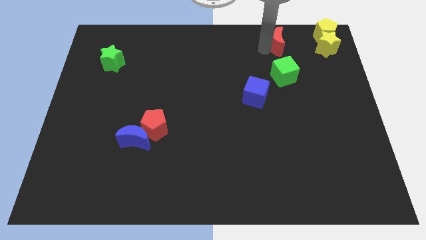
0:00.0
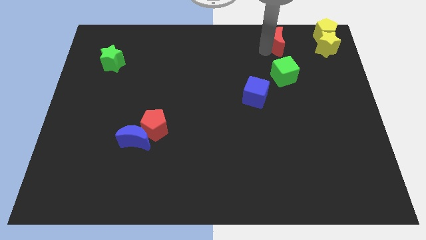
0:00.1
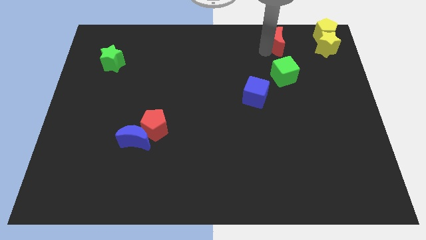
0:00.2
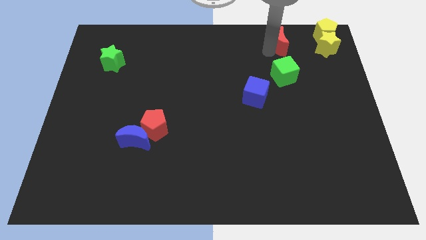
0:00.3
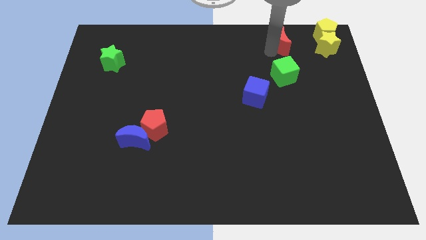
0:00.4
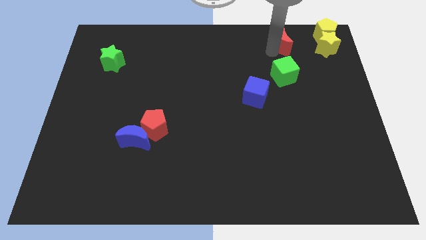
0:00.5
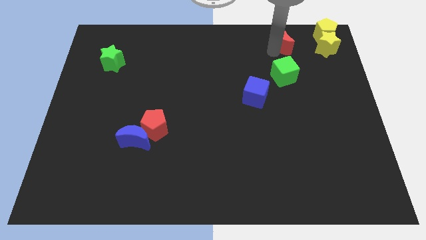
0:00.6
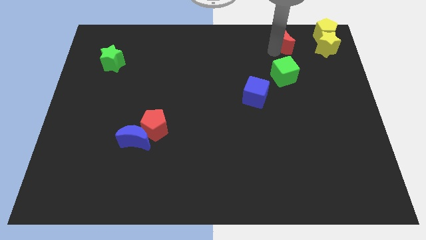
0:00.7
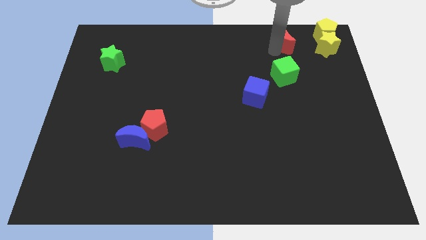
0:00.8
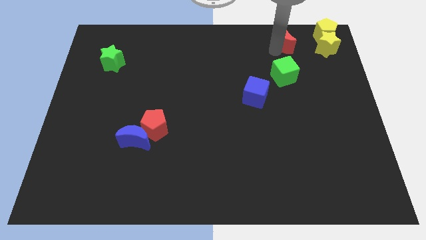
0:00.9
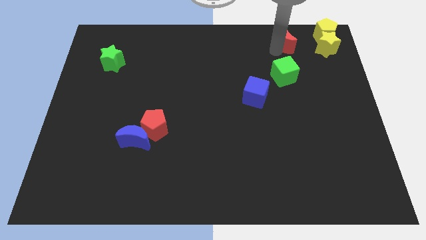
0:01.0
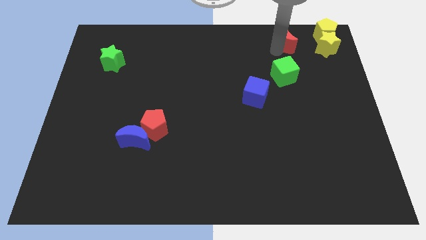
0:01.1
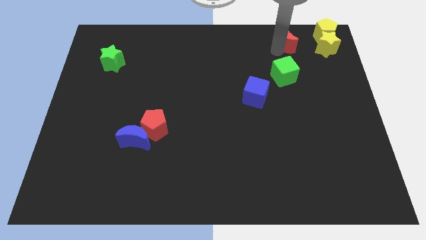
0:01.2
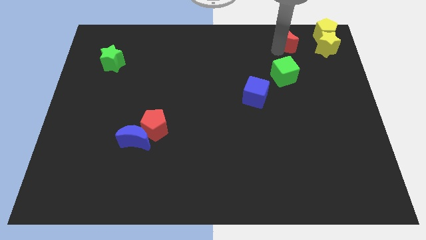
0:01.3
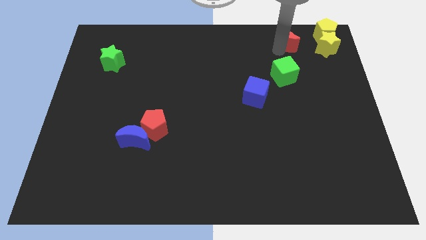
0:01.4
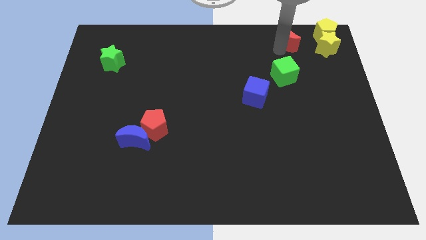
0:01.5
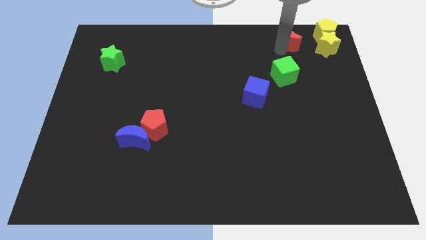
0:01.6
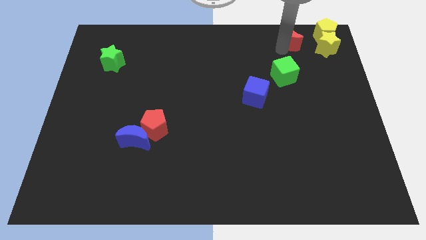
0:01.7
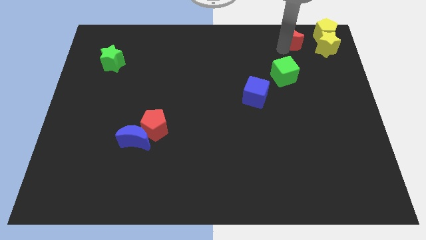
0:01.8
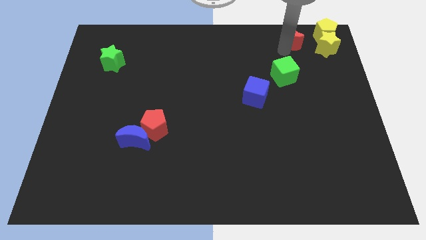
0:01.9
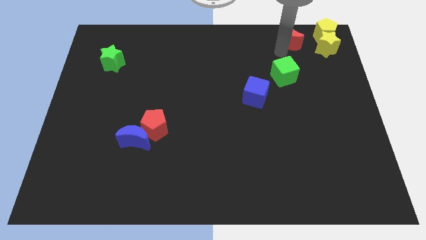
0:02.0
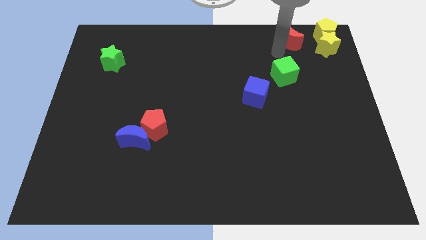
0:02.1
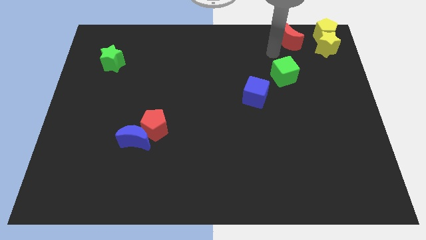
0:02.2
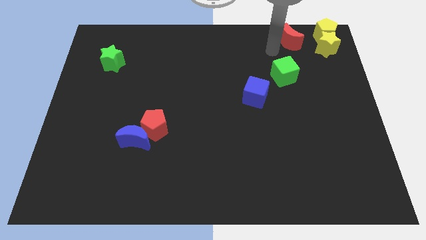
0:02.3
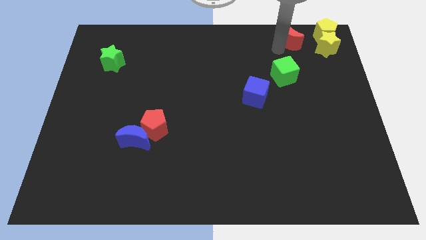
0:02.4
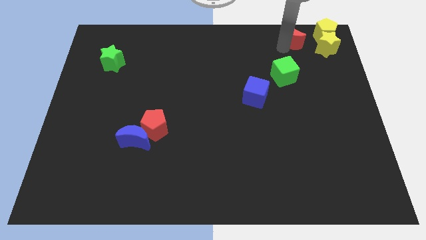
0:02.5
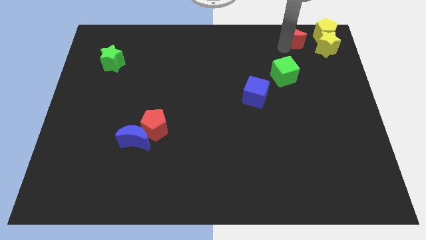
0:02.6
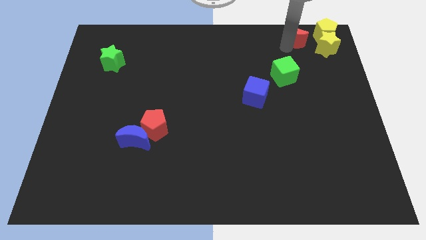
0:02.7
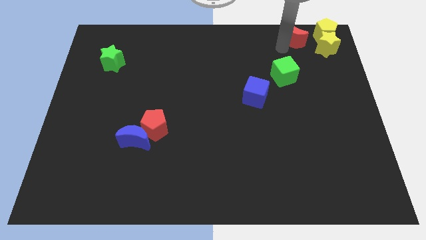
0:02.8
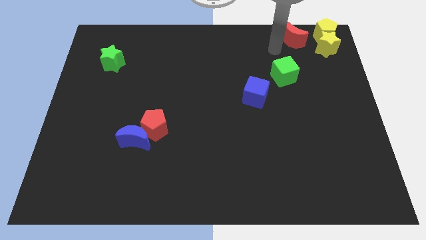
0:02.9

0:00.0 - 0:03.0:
place the red moon diagonally top right to the green cube

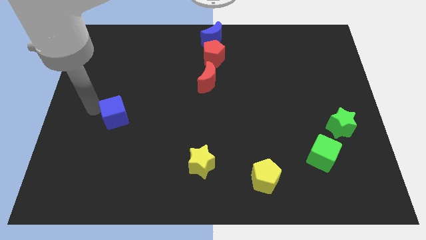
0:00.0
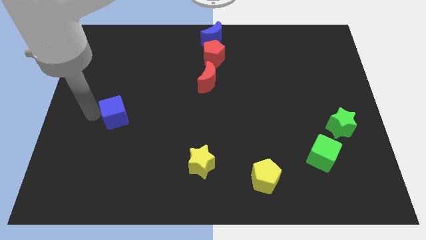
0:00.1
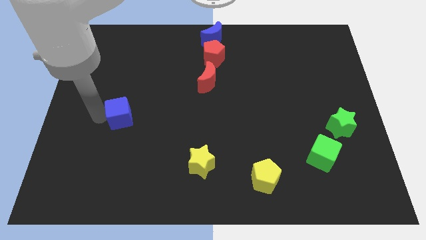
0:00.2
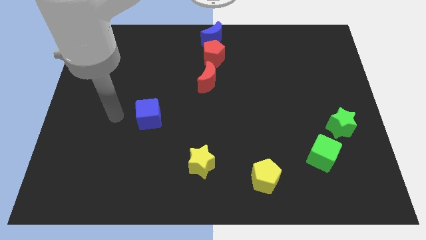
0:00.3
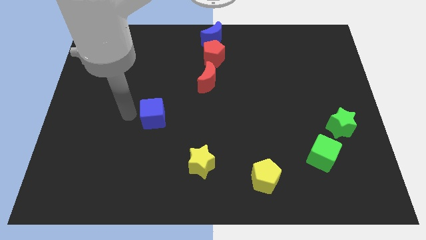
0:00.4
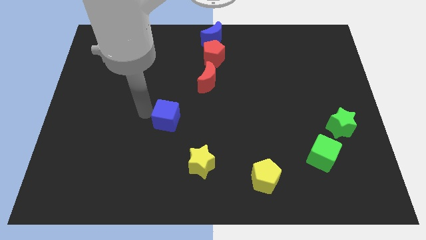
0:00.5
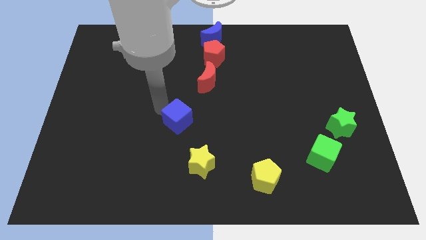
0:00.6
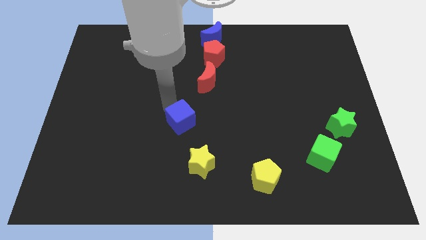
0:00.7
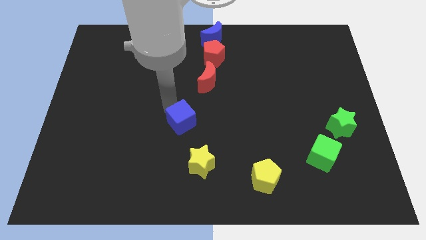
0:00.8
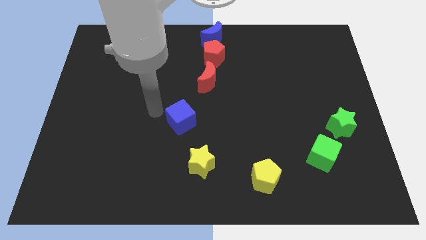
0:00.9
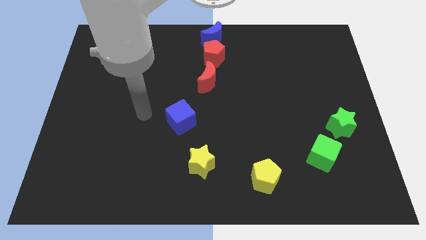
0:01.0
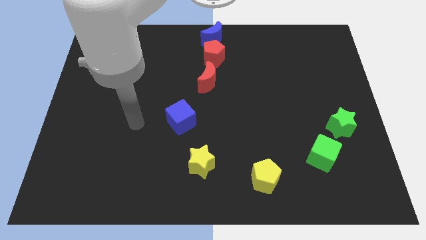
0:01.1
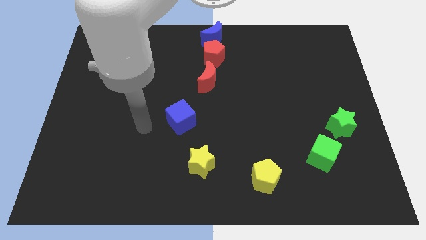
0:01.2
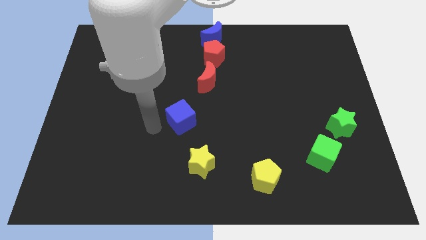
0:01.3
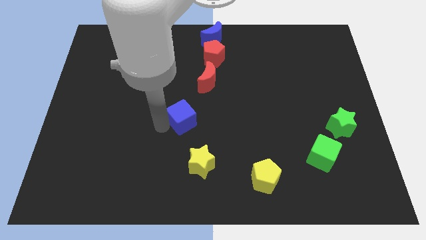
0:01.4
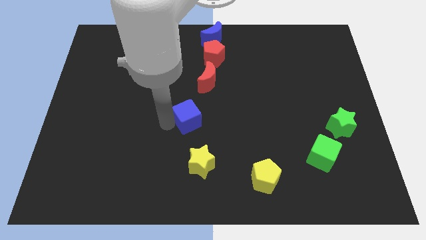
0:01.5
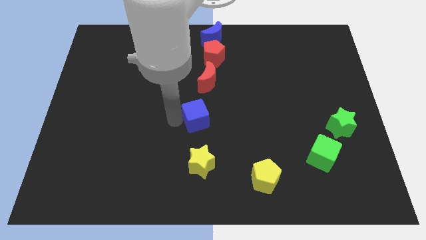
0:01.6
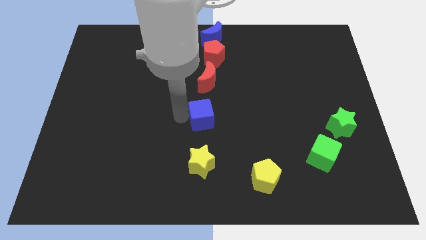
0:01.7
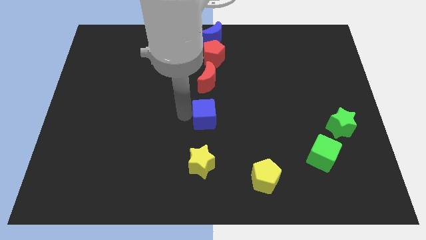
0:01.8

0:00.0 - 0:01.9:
place the blue cube below the red moon to form a line

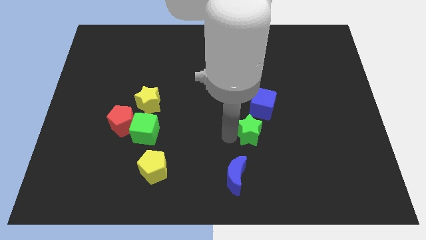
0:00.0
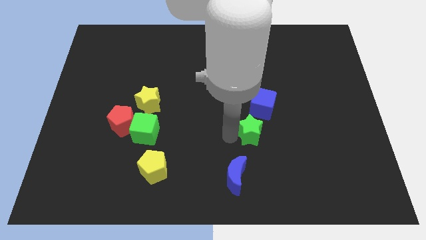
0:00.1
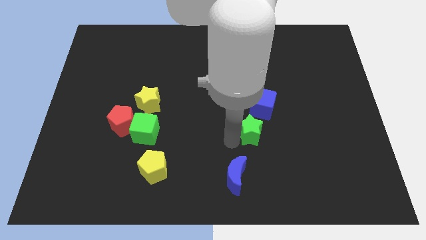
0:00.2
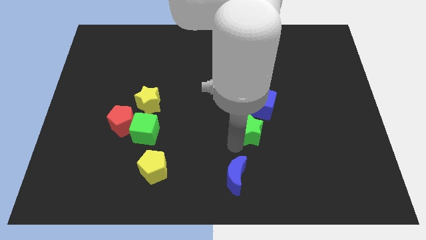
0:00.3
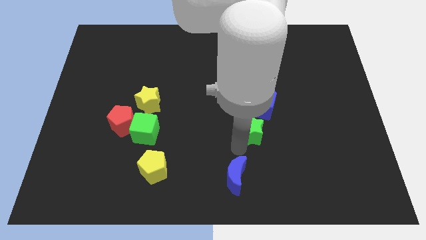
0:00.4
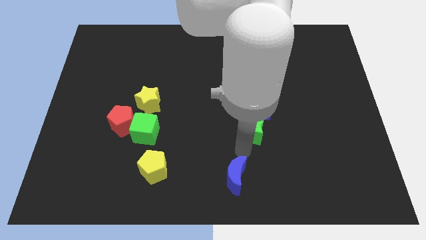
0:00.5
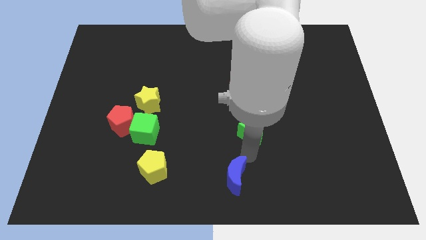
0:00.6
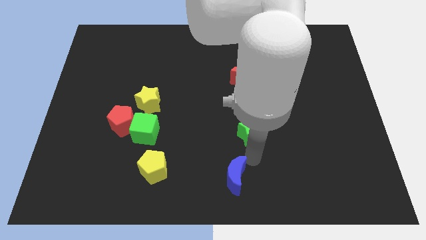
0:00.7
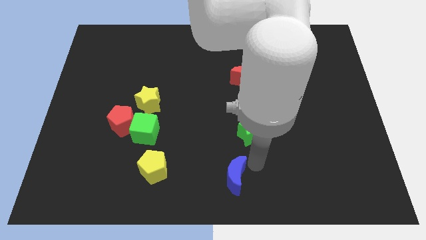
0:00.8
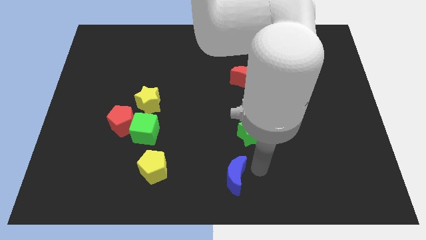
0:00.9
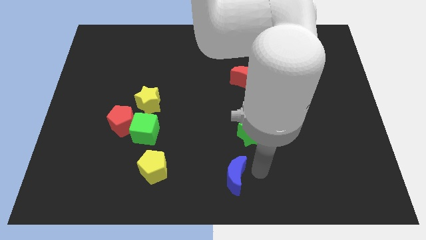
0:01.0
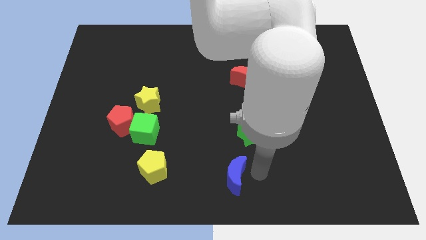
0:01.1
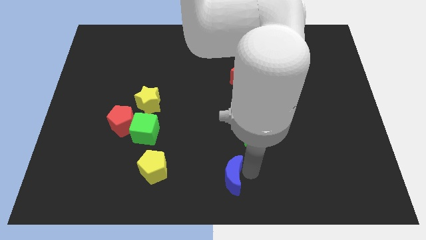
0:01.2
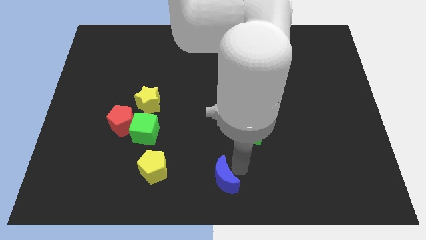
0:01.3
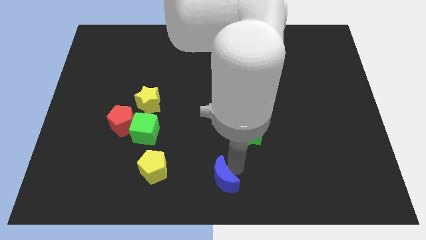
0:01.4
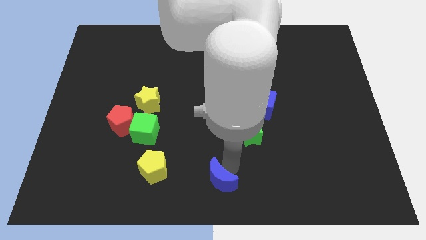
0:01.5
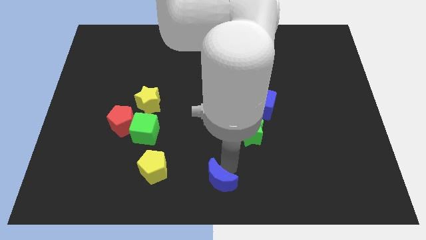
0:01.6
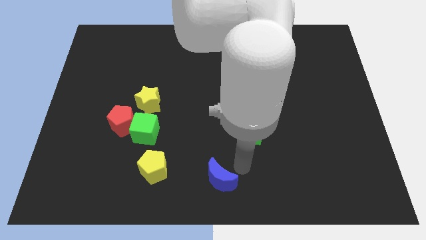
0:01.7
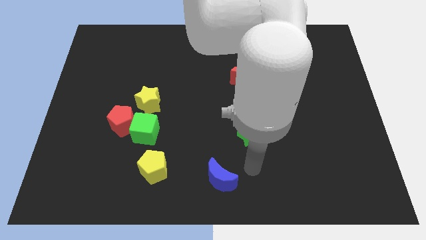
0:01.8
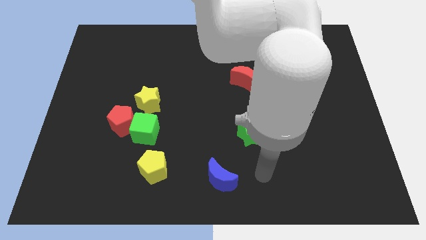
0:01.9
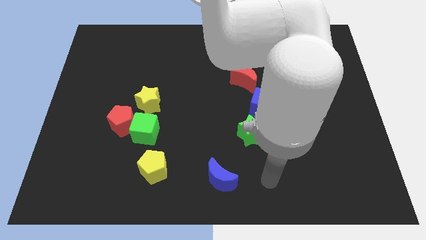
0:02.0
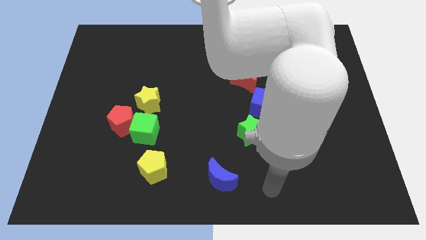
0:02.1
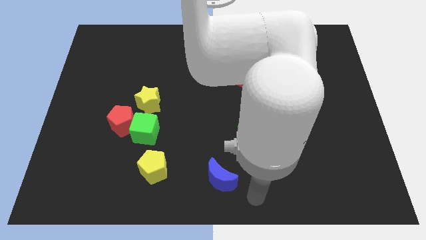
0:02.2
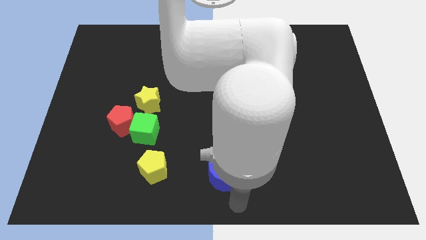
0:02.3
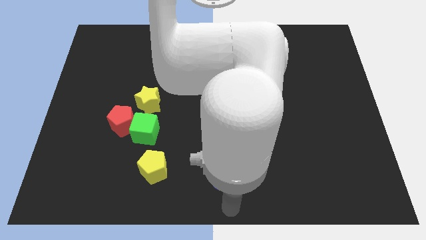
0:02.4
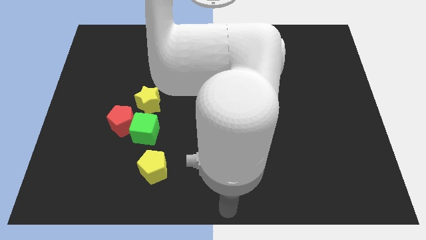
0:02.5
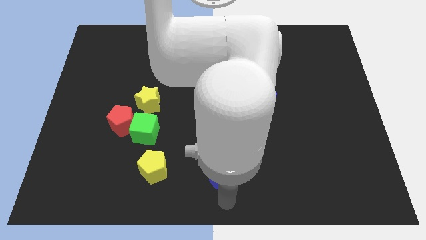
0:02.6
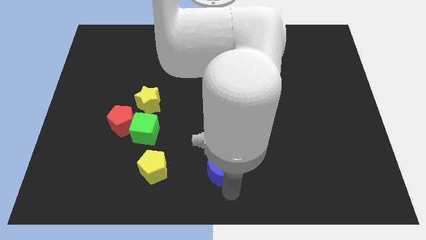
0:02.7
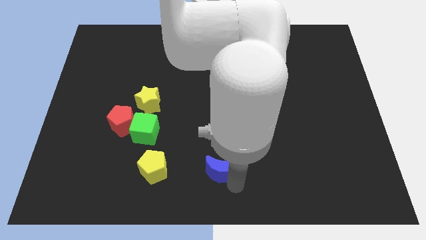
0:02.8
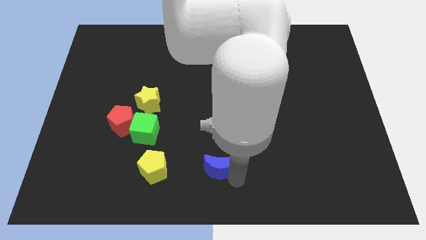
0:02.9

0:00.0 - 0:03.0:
move the blue moon parallel to the yellow pentagon

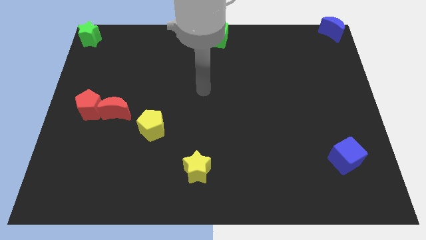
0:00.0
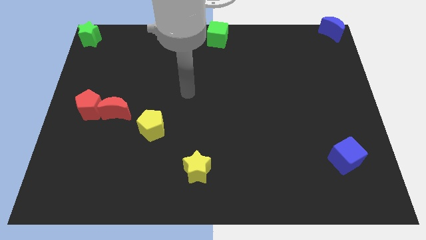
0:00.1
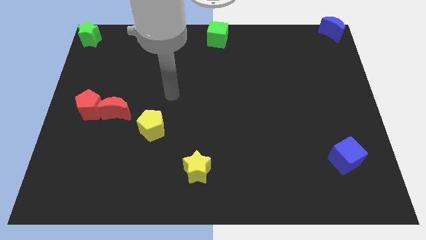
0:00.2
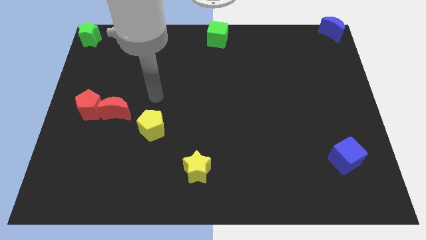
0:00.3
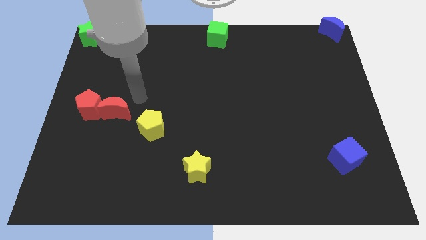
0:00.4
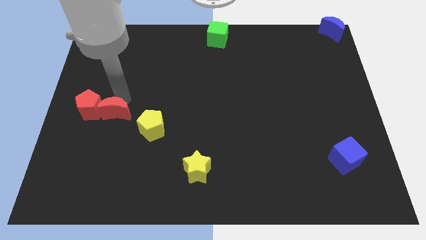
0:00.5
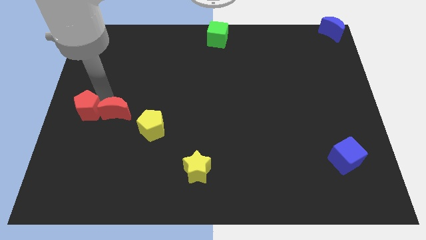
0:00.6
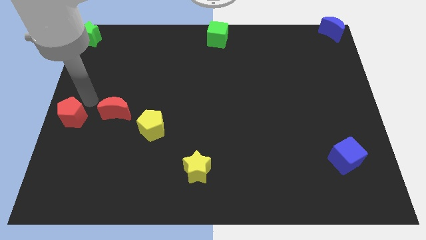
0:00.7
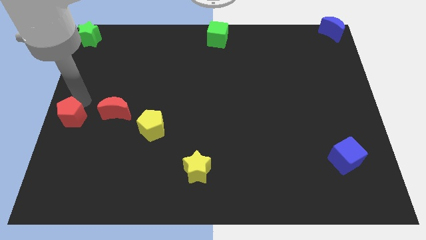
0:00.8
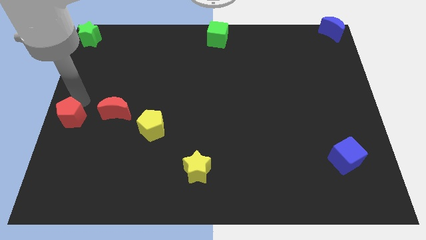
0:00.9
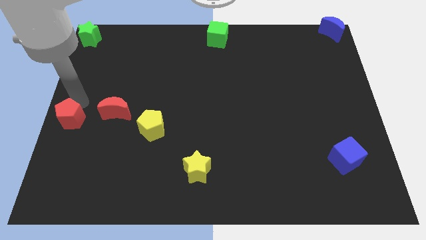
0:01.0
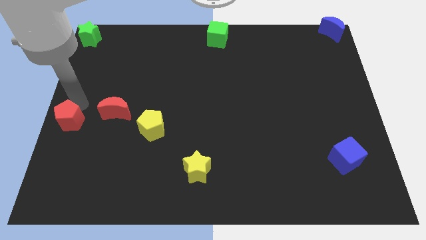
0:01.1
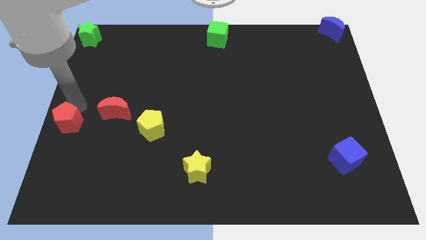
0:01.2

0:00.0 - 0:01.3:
separate the red pentagon from the red crescent
